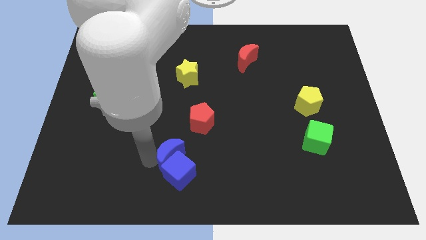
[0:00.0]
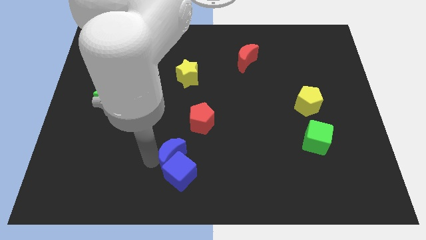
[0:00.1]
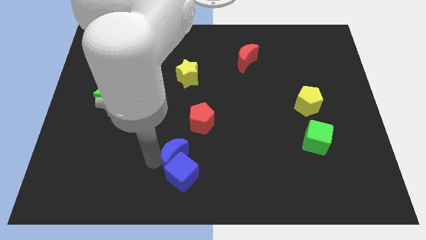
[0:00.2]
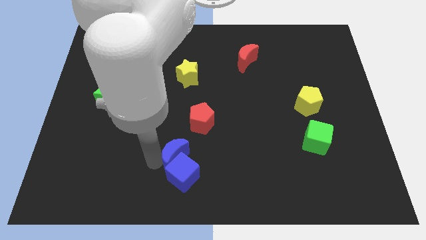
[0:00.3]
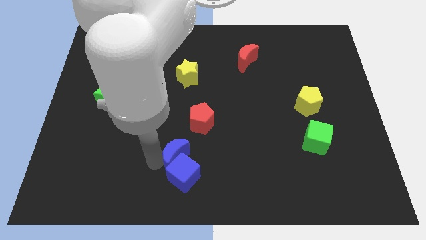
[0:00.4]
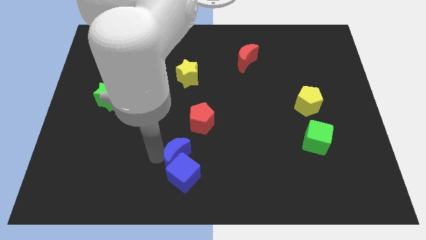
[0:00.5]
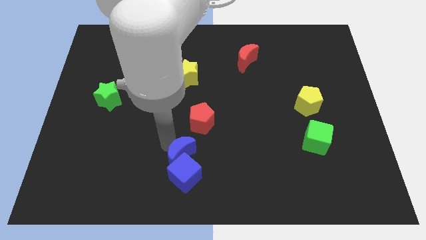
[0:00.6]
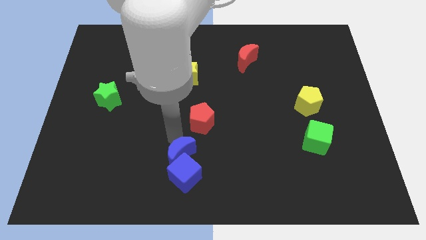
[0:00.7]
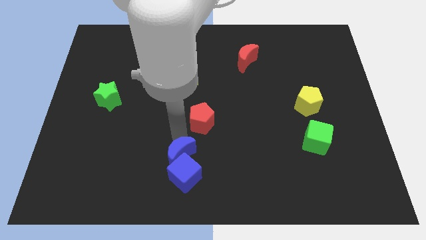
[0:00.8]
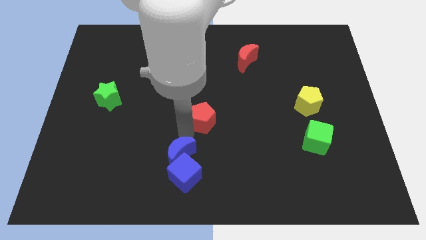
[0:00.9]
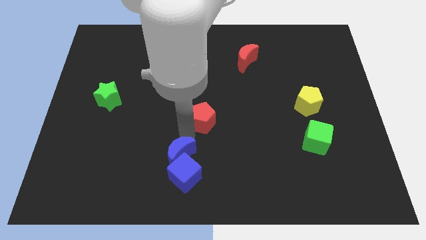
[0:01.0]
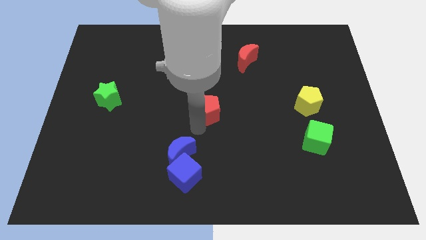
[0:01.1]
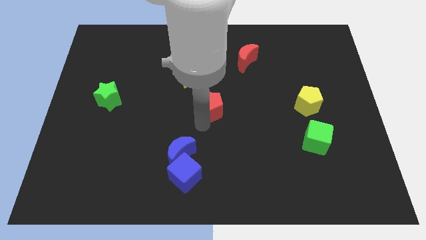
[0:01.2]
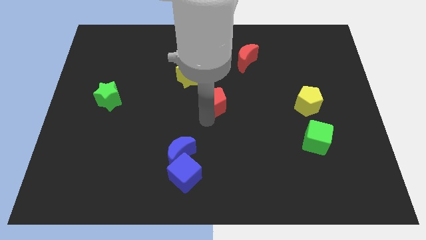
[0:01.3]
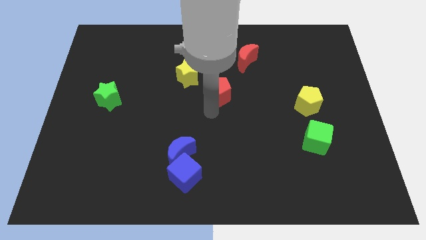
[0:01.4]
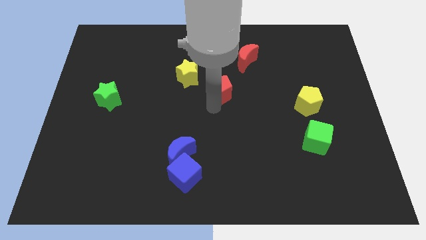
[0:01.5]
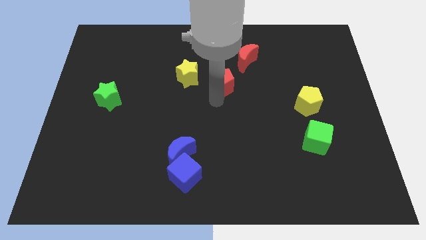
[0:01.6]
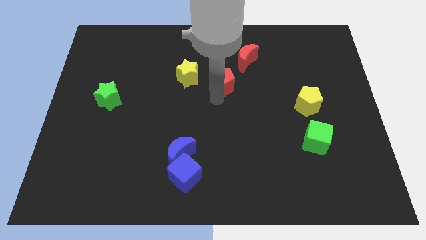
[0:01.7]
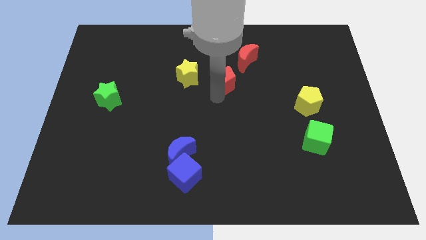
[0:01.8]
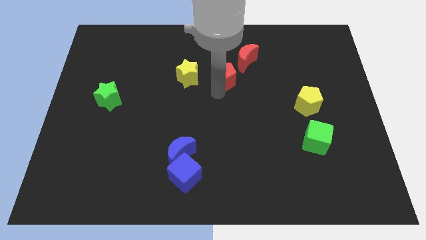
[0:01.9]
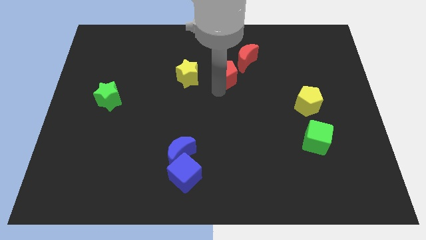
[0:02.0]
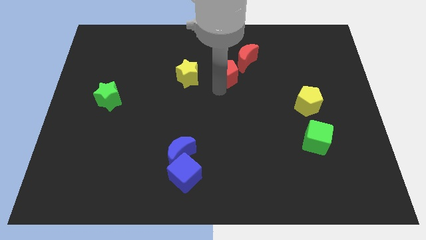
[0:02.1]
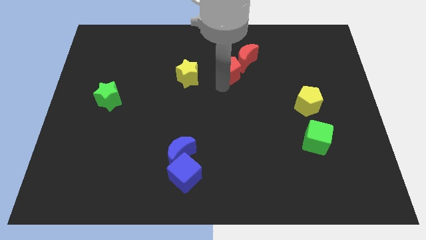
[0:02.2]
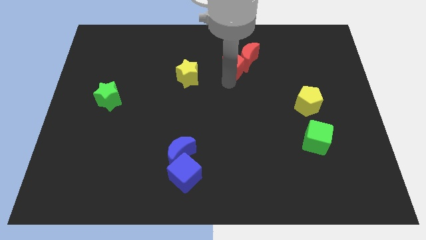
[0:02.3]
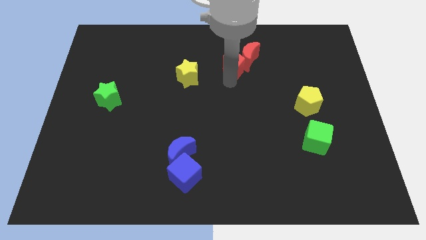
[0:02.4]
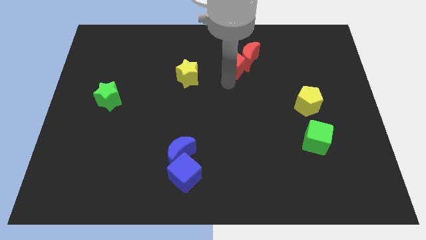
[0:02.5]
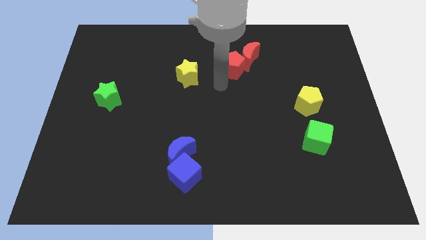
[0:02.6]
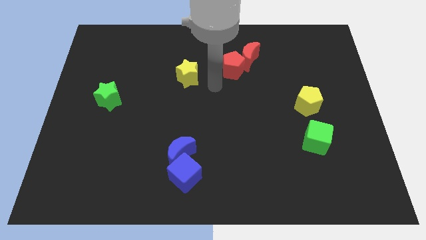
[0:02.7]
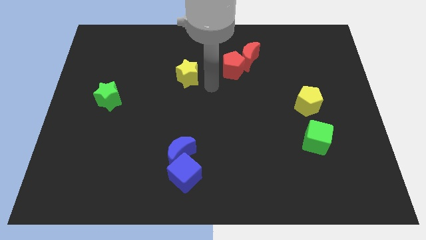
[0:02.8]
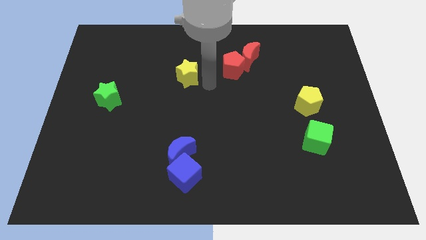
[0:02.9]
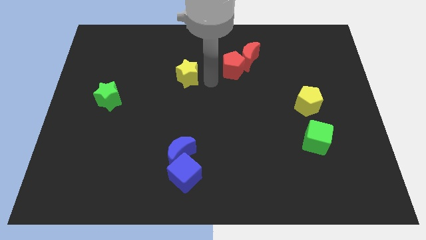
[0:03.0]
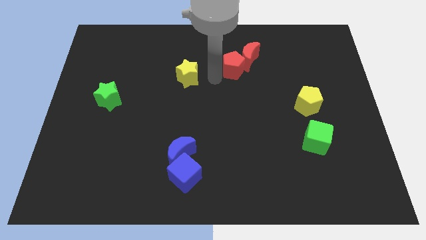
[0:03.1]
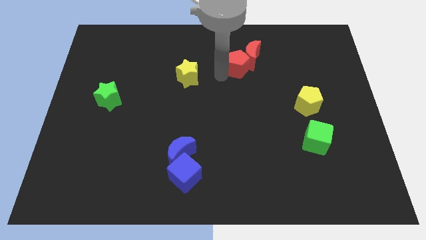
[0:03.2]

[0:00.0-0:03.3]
push red pentagon into red moon

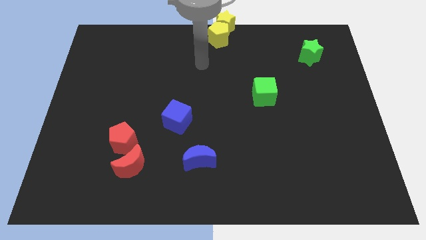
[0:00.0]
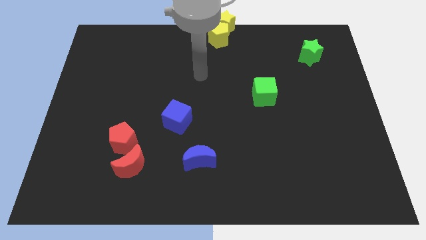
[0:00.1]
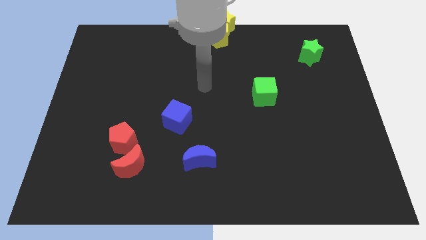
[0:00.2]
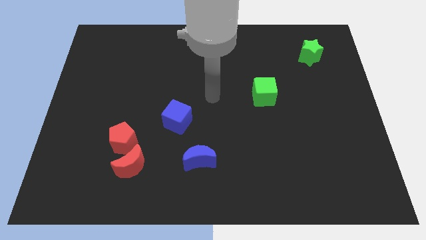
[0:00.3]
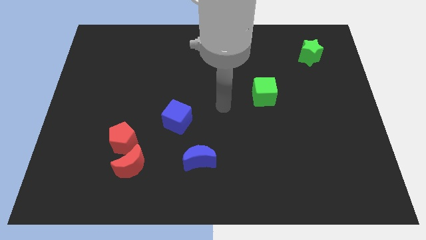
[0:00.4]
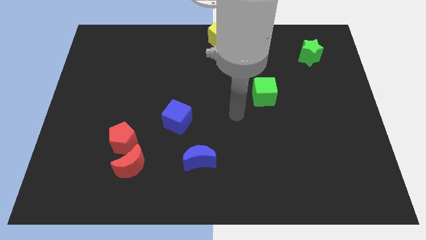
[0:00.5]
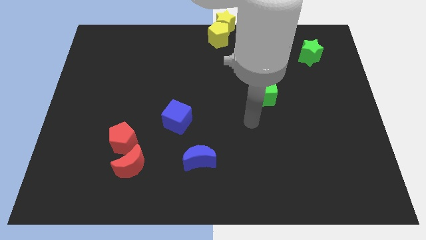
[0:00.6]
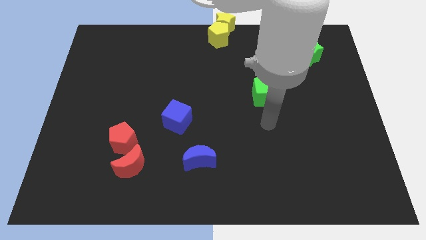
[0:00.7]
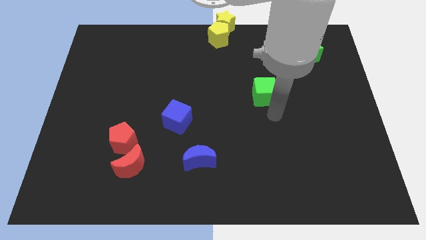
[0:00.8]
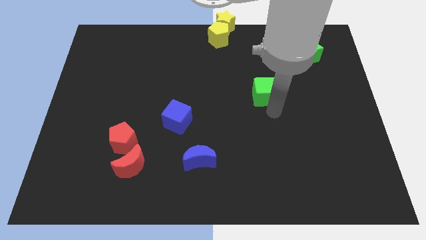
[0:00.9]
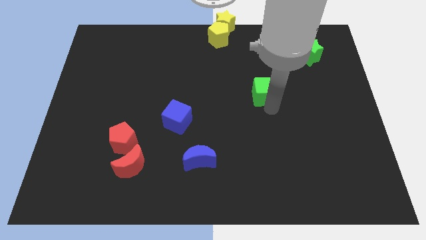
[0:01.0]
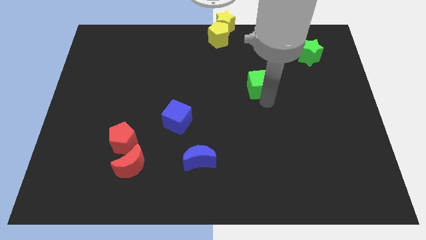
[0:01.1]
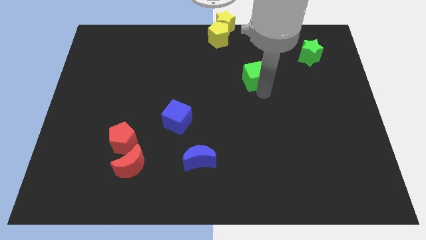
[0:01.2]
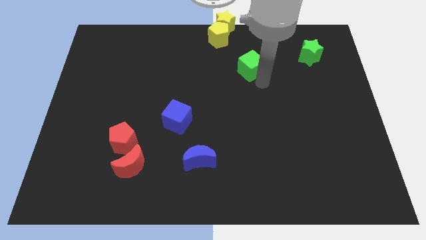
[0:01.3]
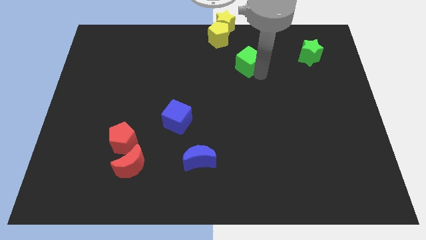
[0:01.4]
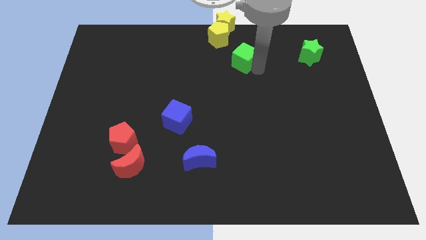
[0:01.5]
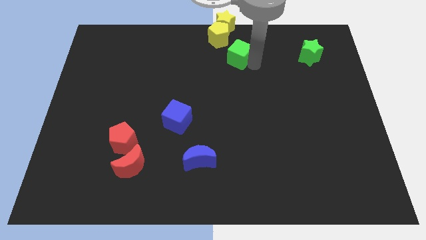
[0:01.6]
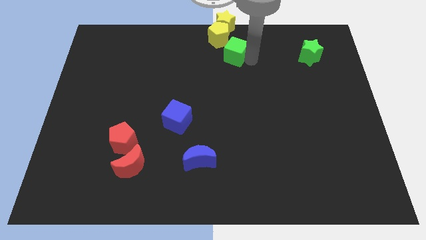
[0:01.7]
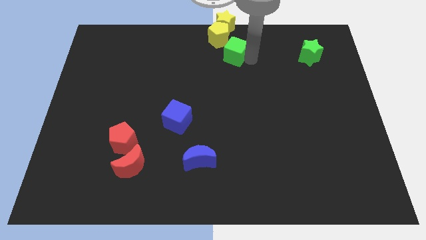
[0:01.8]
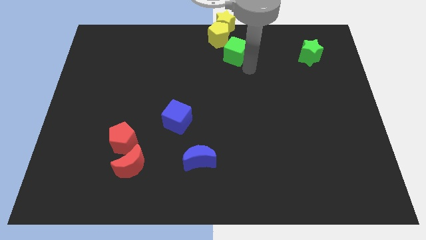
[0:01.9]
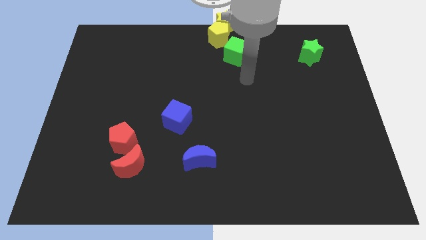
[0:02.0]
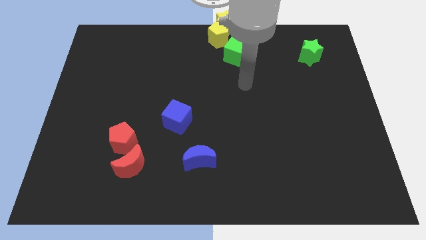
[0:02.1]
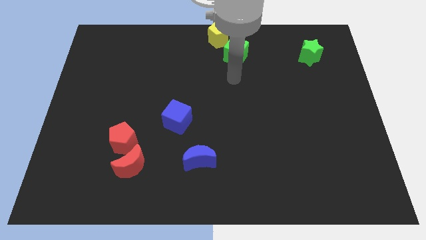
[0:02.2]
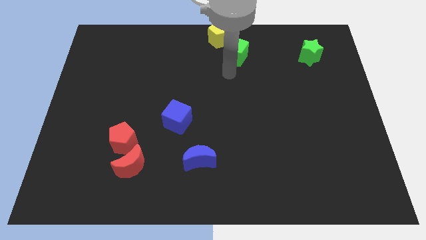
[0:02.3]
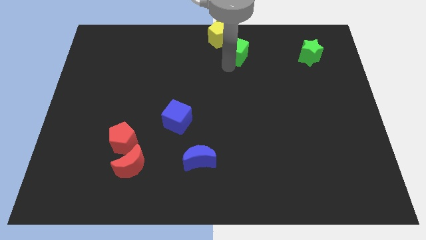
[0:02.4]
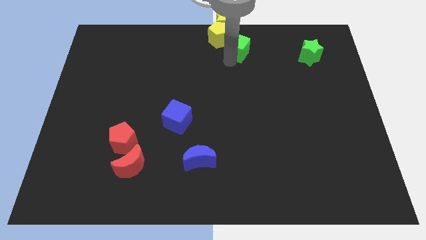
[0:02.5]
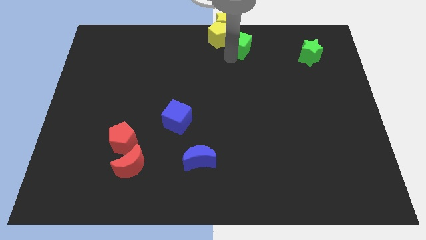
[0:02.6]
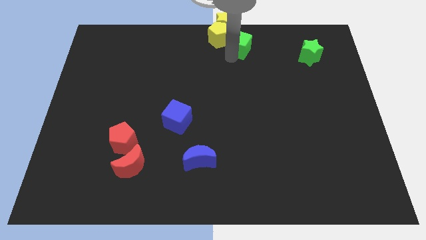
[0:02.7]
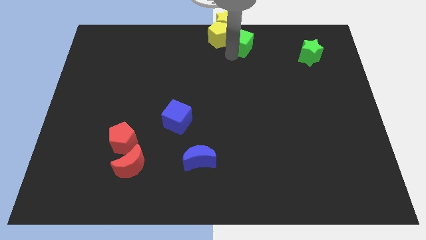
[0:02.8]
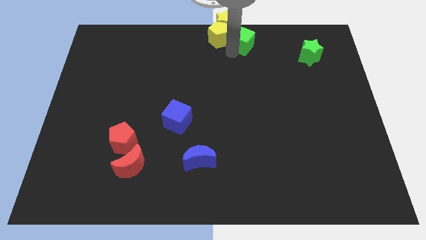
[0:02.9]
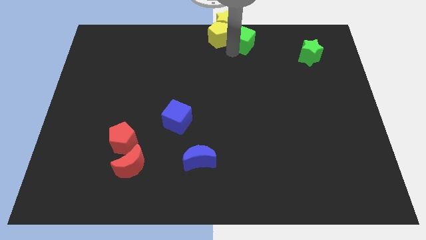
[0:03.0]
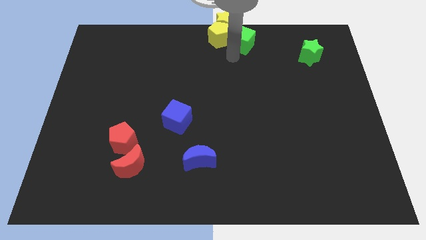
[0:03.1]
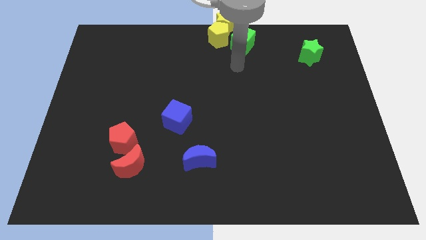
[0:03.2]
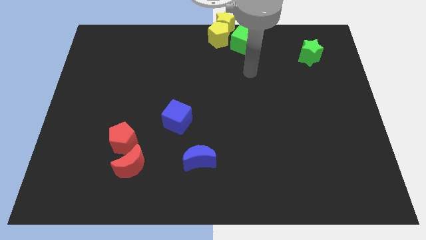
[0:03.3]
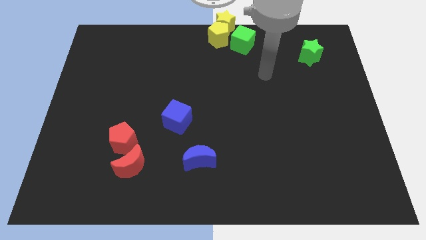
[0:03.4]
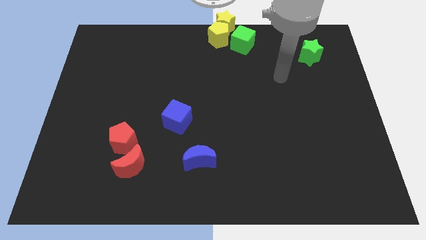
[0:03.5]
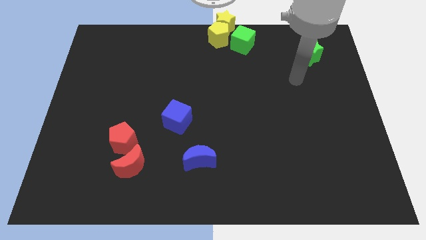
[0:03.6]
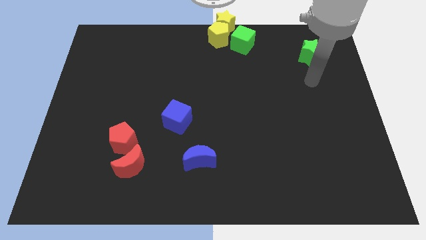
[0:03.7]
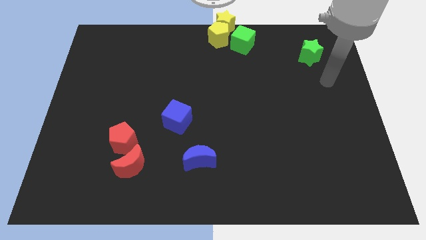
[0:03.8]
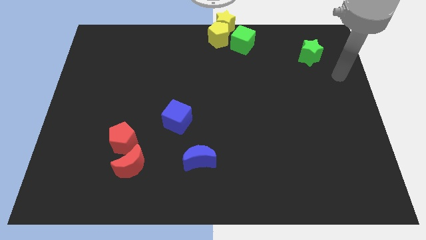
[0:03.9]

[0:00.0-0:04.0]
move the green cube close to the yellow pentagon

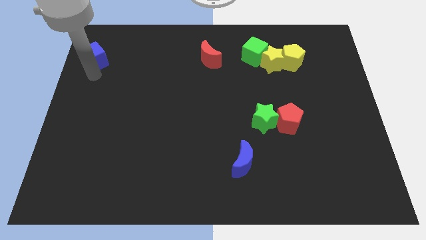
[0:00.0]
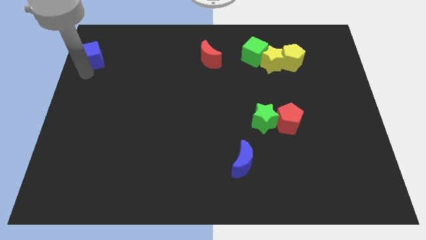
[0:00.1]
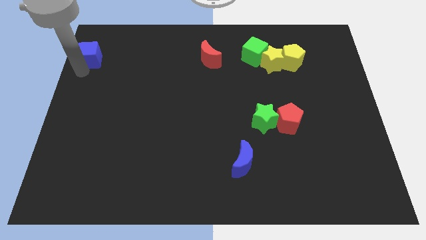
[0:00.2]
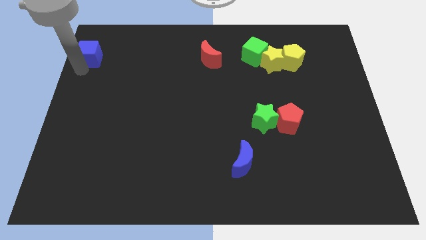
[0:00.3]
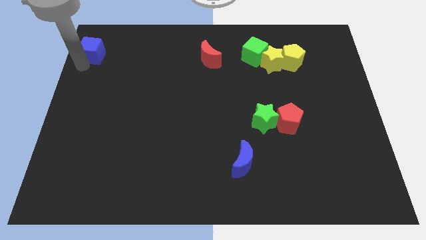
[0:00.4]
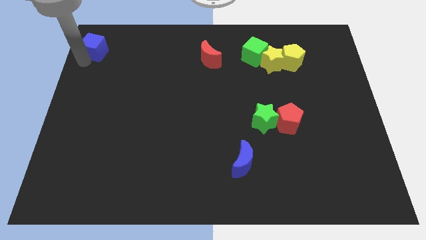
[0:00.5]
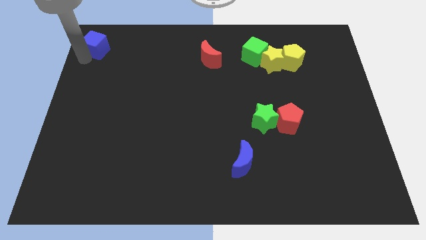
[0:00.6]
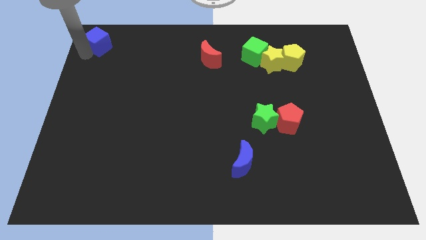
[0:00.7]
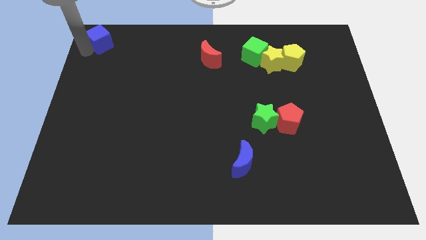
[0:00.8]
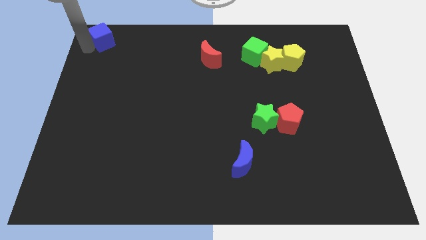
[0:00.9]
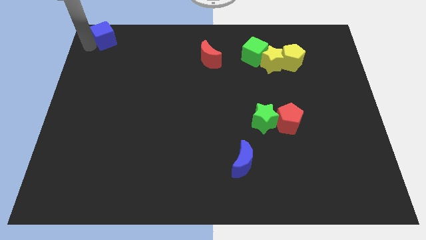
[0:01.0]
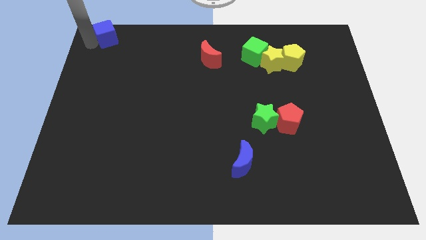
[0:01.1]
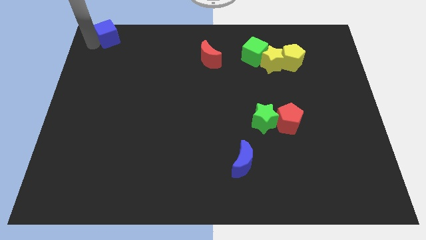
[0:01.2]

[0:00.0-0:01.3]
move the blue cube to the top left corner of the board

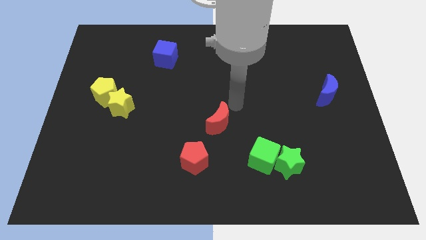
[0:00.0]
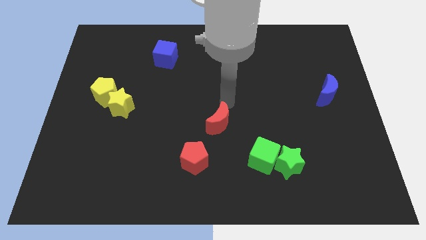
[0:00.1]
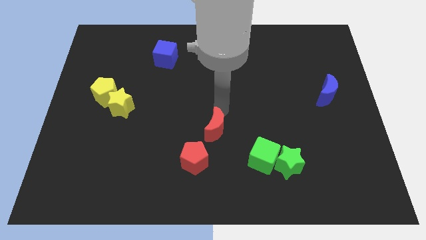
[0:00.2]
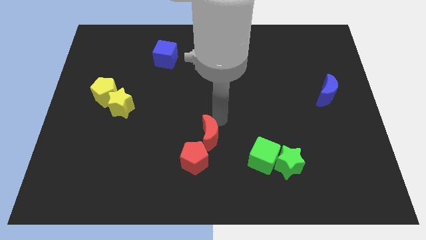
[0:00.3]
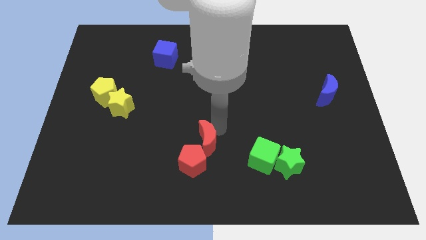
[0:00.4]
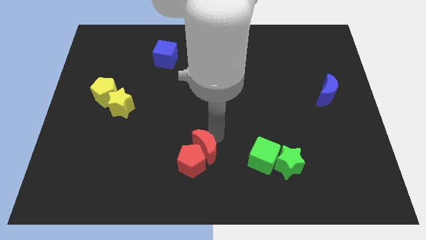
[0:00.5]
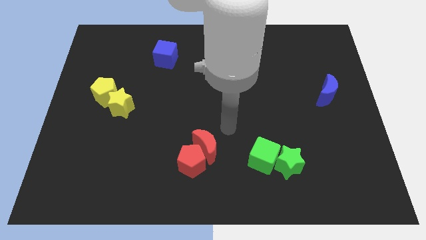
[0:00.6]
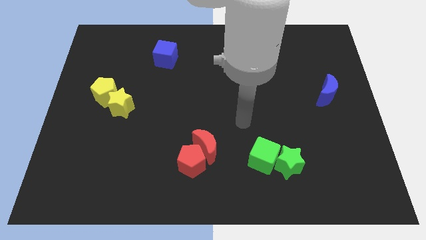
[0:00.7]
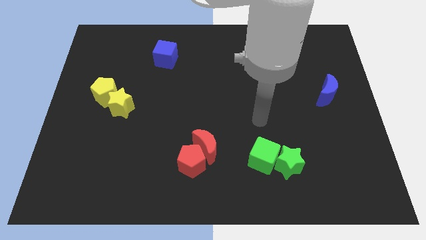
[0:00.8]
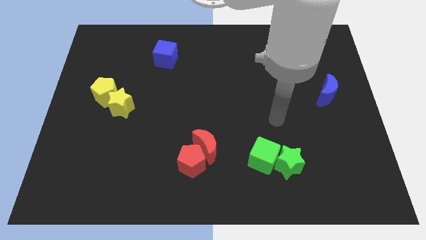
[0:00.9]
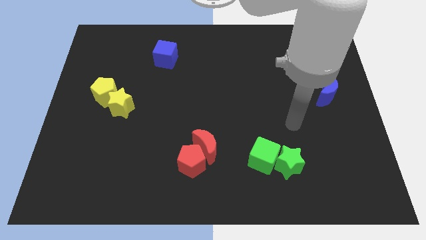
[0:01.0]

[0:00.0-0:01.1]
drag the red moon close to the red pentagon
